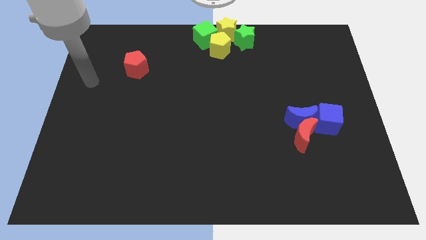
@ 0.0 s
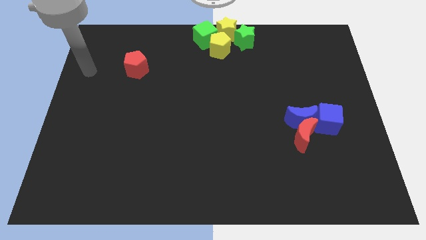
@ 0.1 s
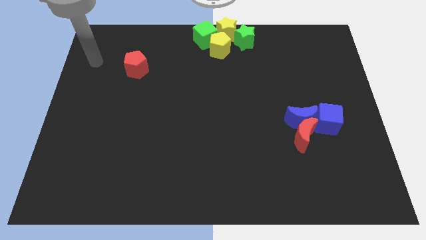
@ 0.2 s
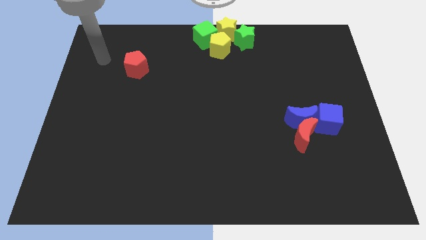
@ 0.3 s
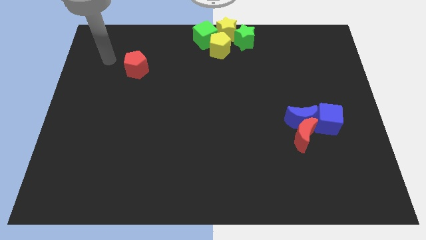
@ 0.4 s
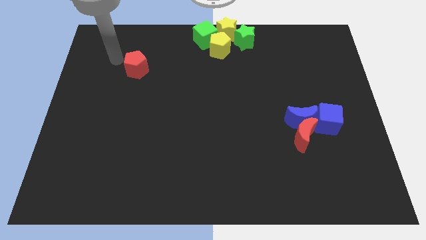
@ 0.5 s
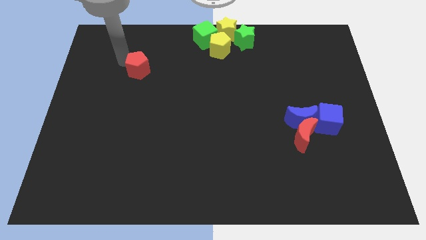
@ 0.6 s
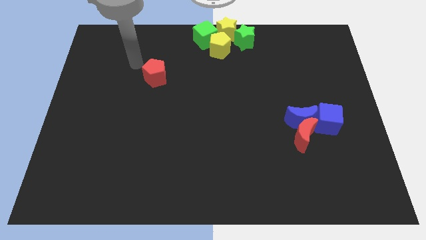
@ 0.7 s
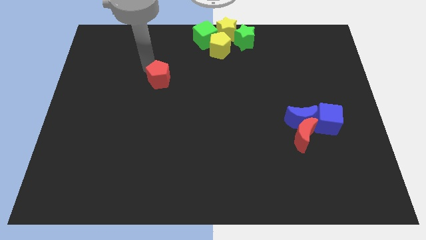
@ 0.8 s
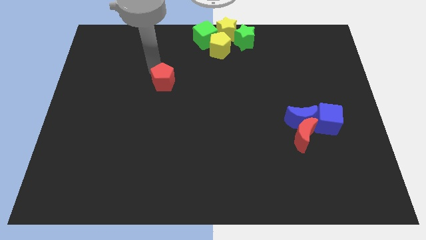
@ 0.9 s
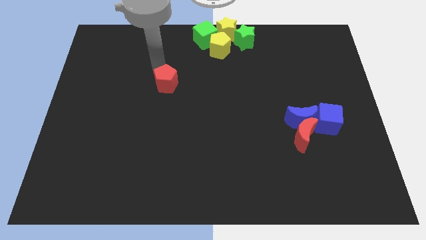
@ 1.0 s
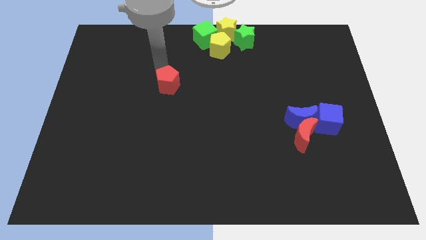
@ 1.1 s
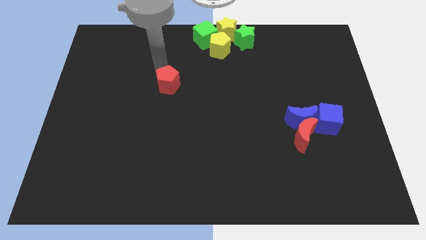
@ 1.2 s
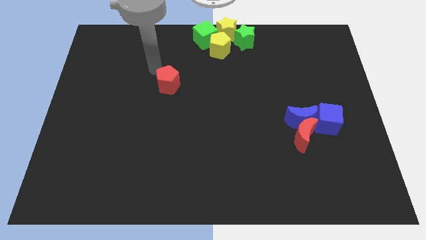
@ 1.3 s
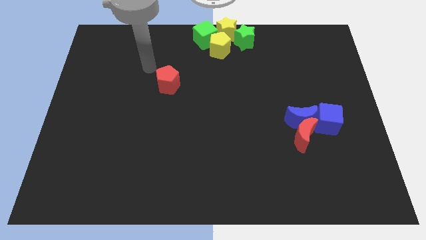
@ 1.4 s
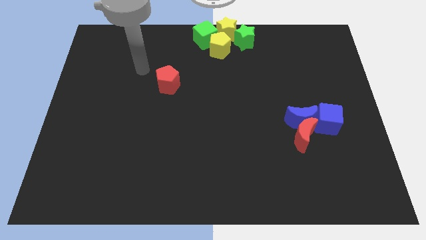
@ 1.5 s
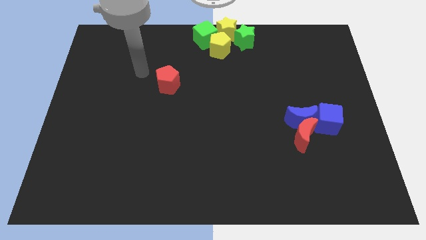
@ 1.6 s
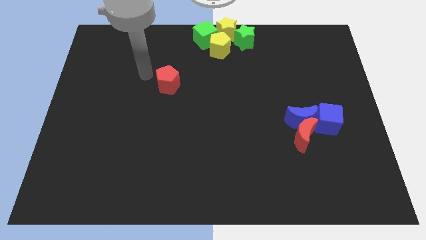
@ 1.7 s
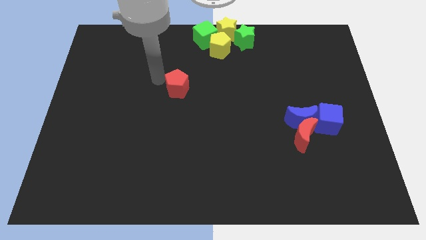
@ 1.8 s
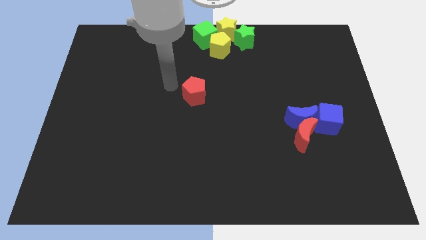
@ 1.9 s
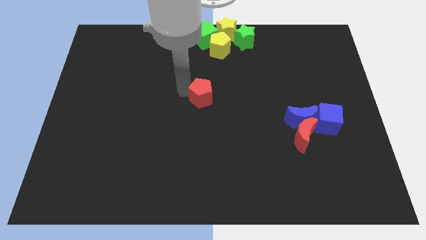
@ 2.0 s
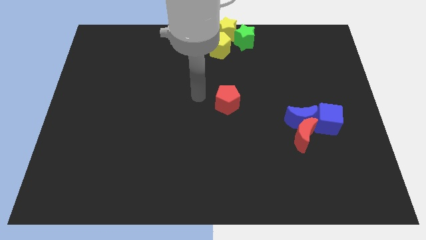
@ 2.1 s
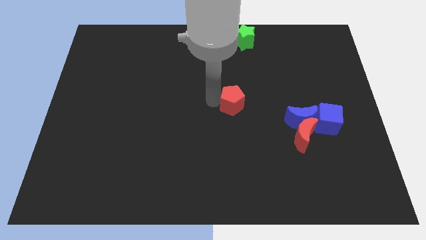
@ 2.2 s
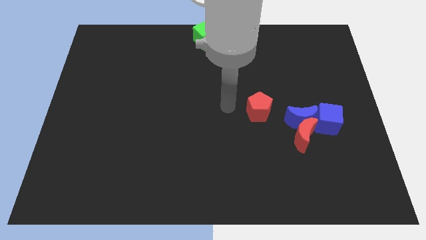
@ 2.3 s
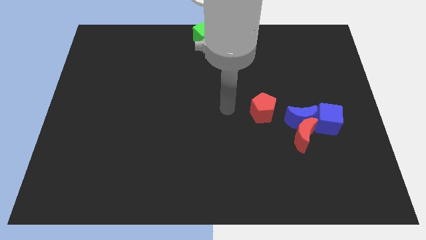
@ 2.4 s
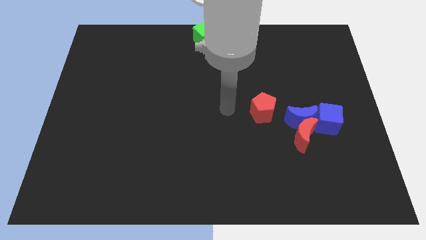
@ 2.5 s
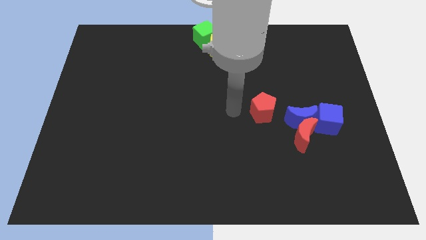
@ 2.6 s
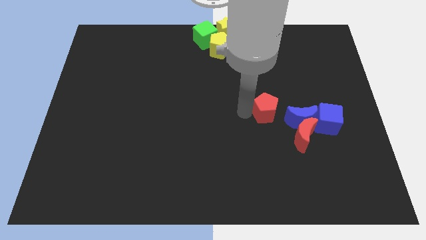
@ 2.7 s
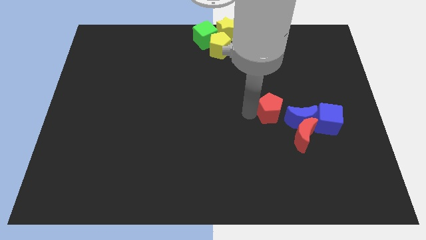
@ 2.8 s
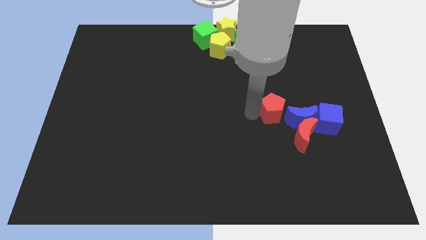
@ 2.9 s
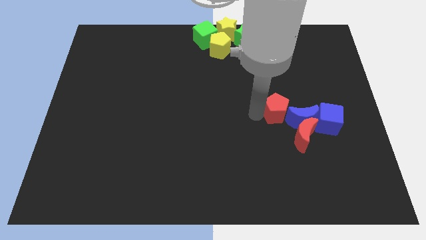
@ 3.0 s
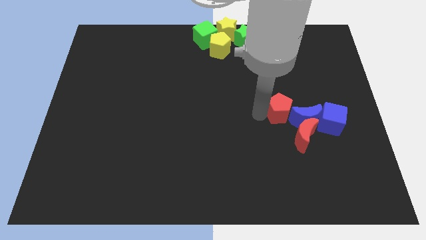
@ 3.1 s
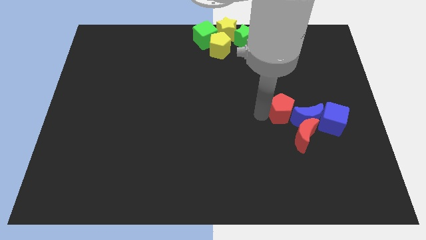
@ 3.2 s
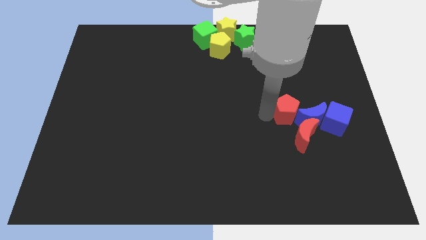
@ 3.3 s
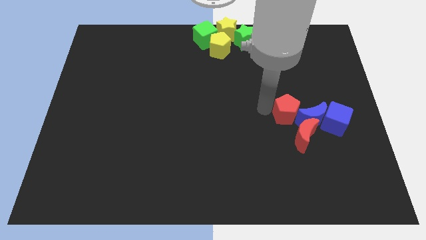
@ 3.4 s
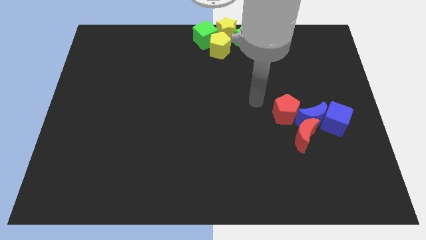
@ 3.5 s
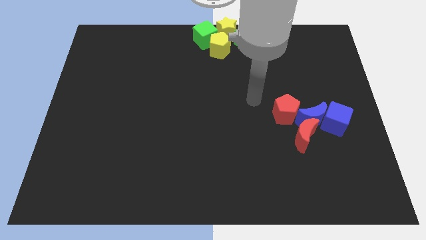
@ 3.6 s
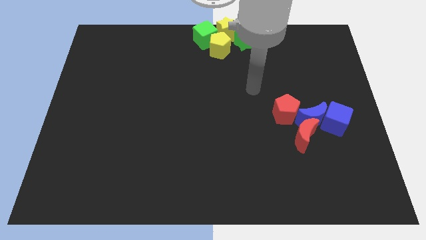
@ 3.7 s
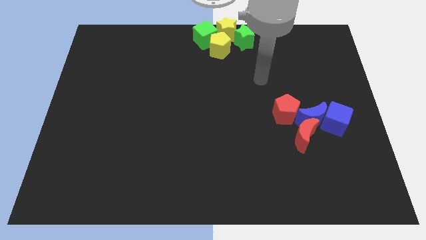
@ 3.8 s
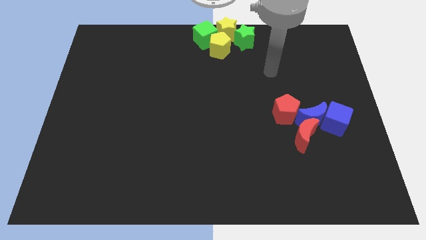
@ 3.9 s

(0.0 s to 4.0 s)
push the red pentagon left to the blue crescent to form a diagonal line

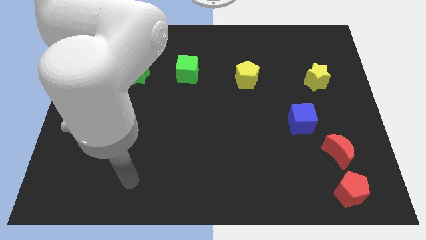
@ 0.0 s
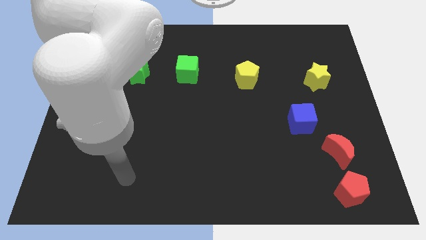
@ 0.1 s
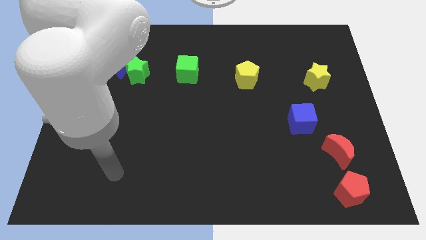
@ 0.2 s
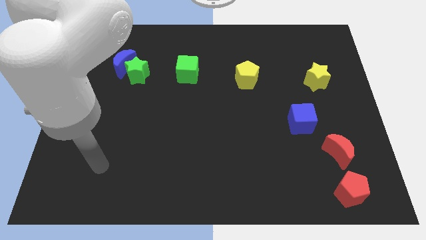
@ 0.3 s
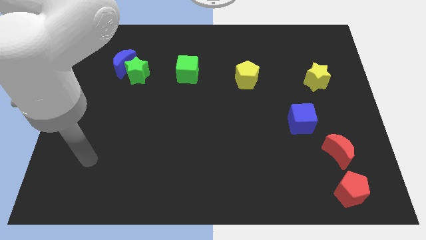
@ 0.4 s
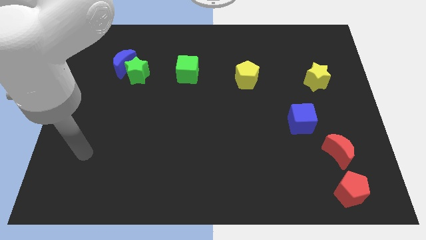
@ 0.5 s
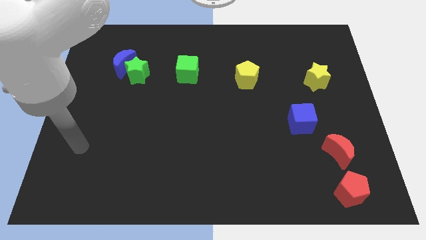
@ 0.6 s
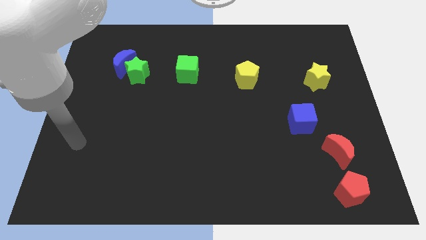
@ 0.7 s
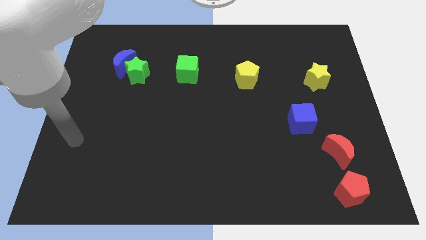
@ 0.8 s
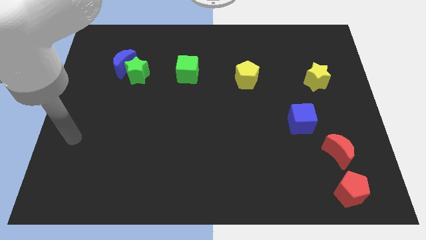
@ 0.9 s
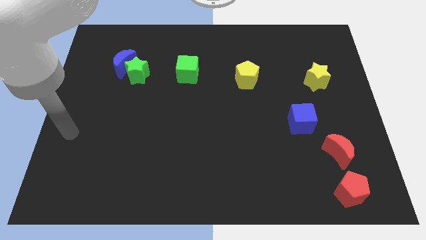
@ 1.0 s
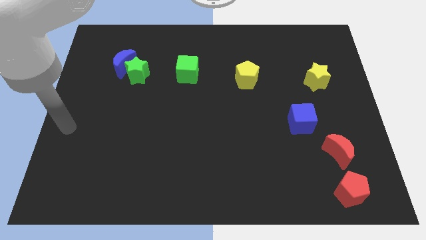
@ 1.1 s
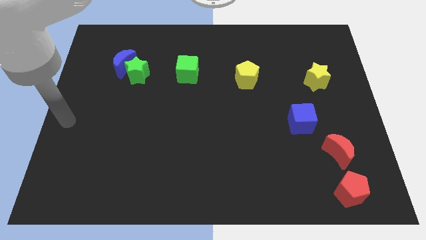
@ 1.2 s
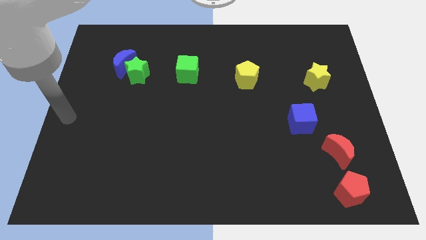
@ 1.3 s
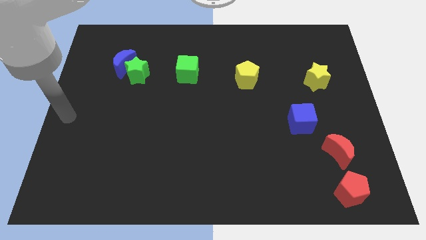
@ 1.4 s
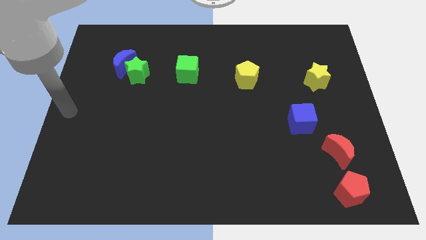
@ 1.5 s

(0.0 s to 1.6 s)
push your hand at the center left of the board

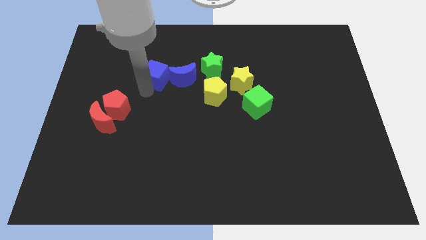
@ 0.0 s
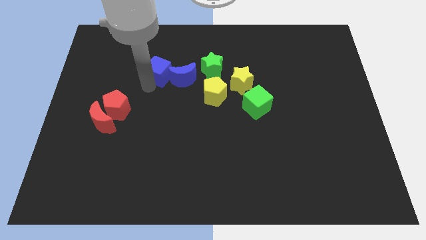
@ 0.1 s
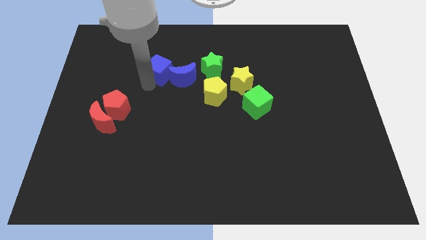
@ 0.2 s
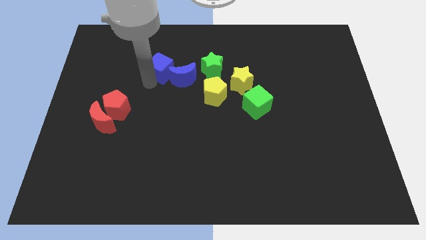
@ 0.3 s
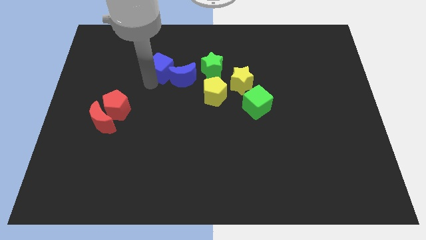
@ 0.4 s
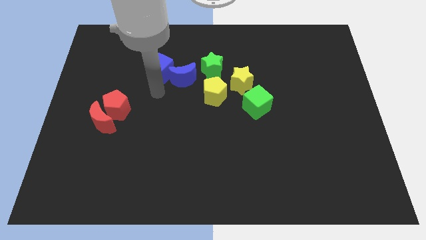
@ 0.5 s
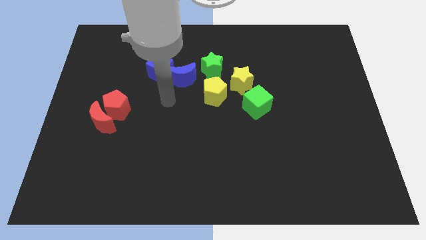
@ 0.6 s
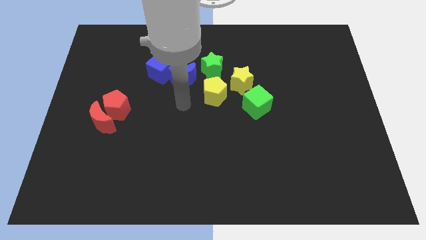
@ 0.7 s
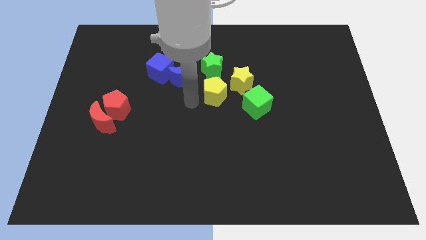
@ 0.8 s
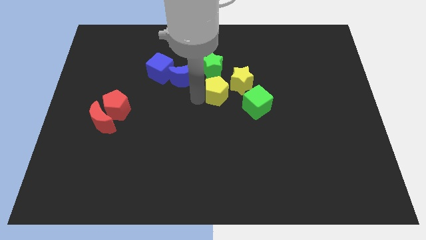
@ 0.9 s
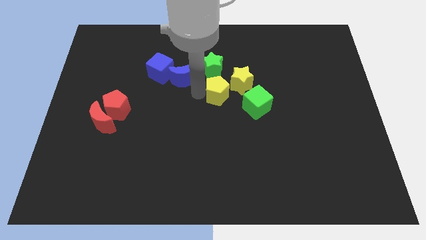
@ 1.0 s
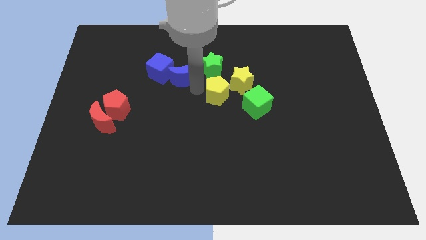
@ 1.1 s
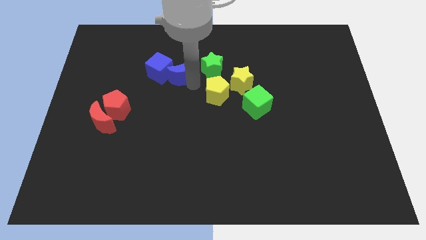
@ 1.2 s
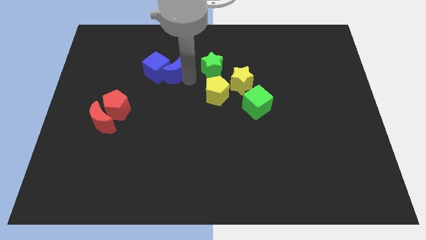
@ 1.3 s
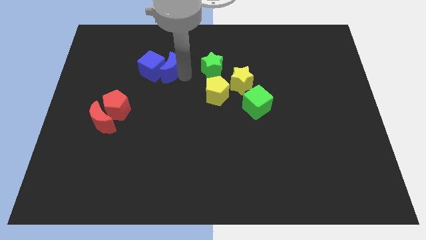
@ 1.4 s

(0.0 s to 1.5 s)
move blue moon along with blue cube towards left

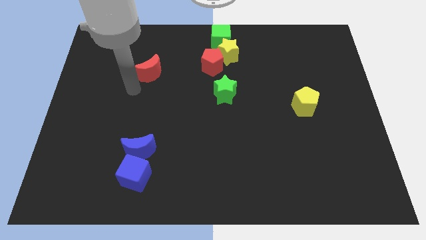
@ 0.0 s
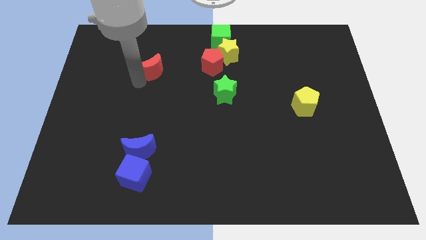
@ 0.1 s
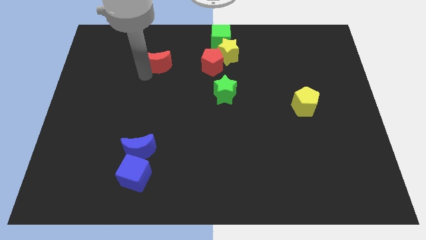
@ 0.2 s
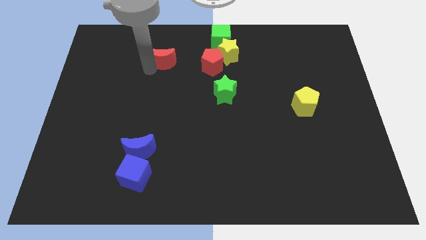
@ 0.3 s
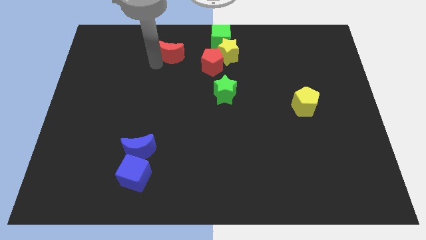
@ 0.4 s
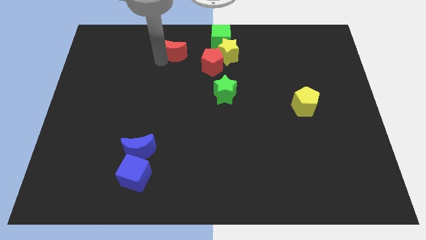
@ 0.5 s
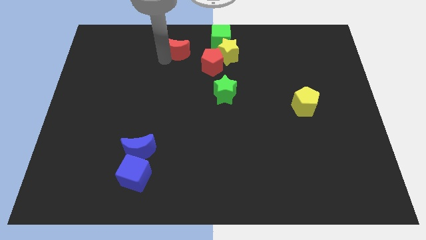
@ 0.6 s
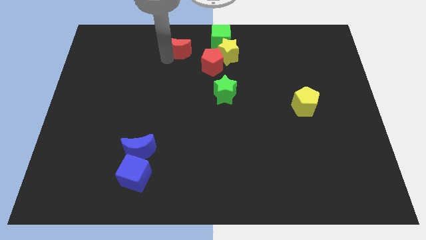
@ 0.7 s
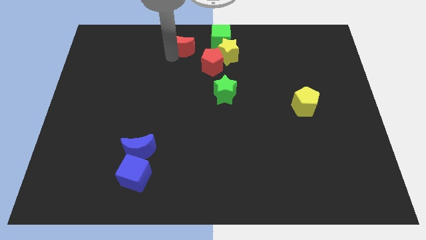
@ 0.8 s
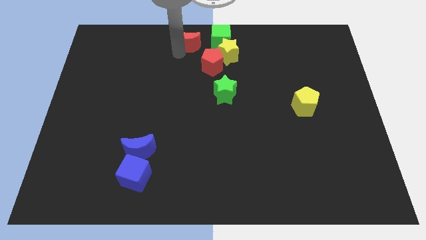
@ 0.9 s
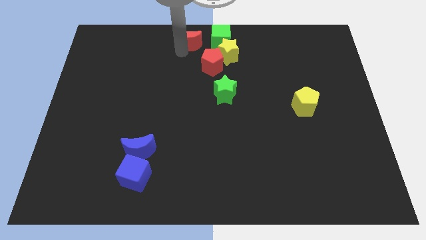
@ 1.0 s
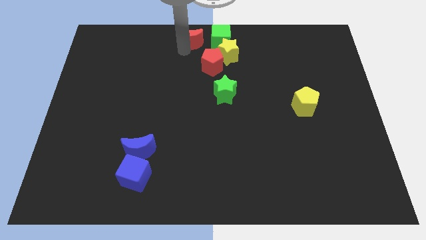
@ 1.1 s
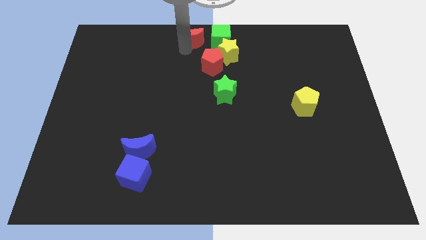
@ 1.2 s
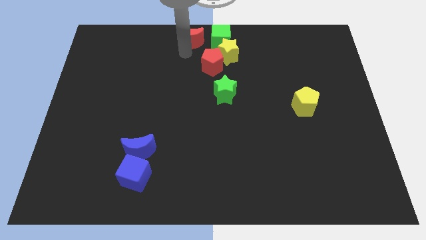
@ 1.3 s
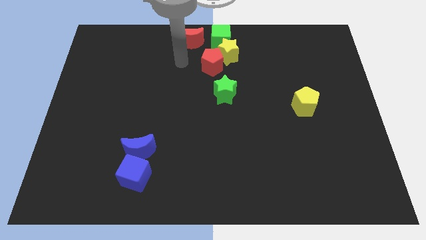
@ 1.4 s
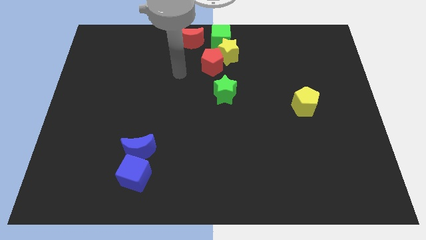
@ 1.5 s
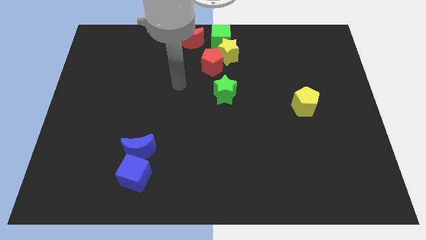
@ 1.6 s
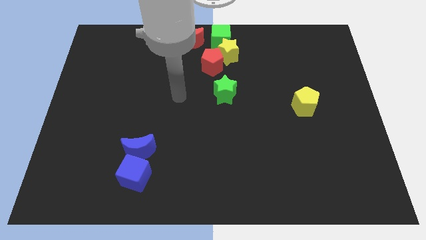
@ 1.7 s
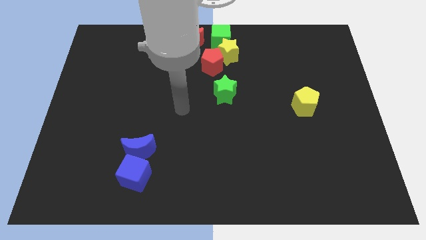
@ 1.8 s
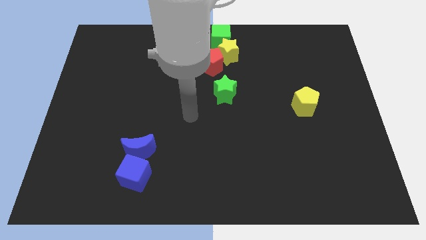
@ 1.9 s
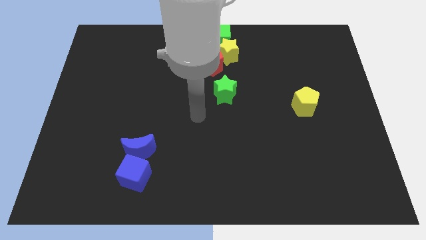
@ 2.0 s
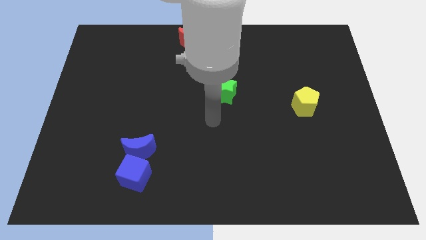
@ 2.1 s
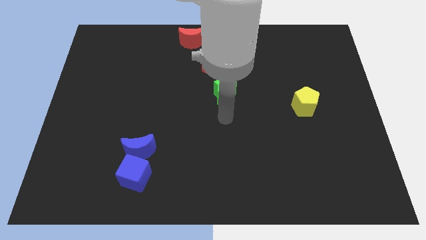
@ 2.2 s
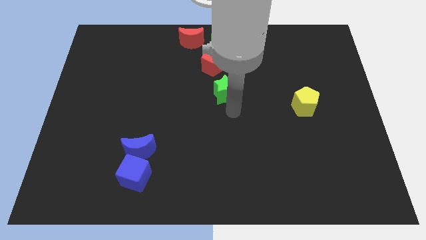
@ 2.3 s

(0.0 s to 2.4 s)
place the arm down to the green star
